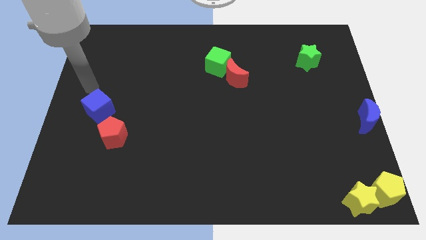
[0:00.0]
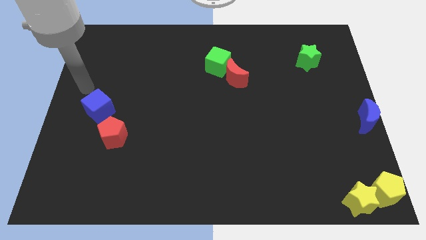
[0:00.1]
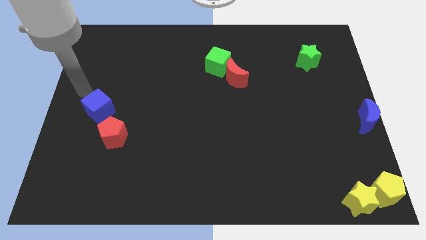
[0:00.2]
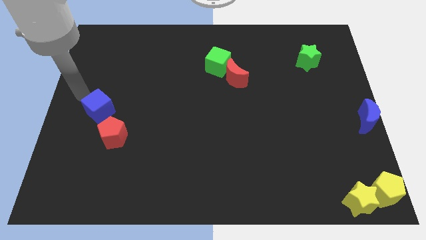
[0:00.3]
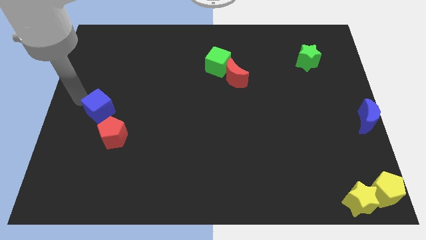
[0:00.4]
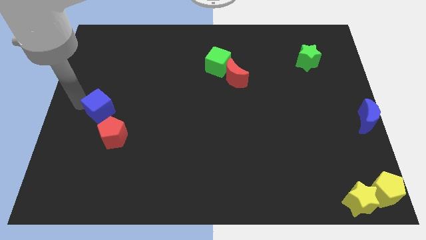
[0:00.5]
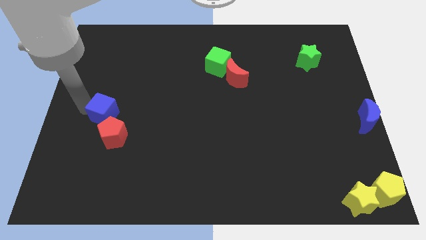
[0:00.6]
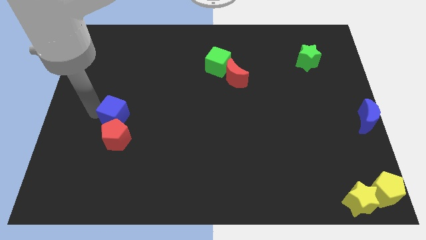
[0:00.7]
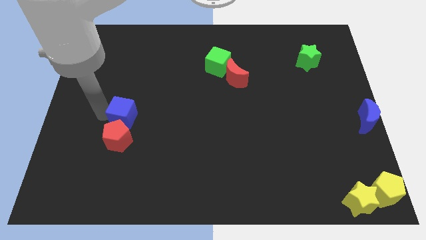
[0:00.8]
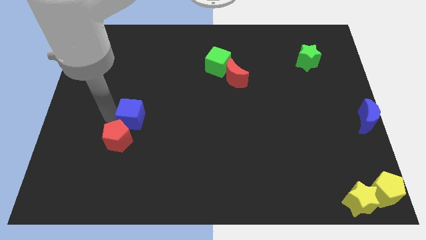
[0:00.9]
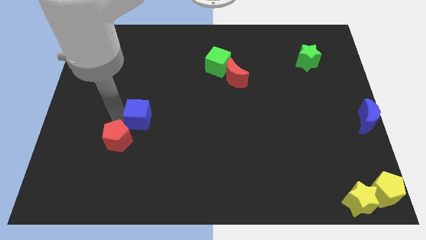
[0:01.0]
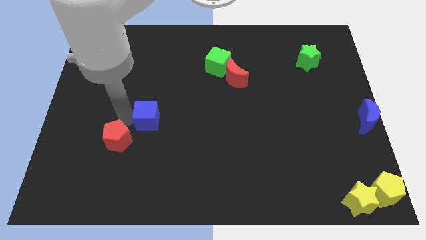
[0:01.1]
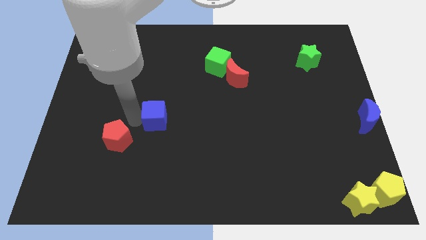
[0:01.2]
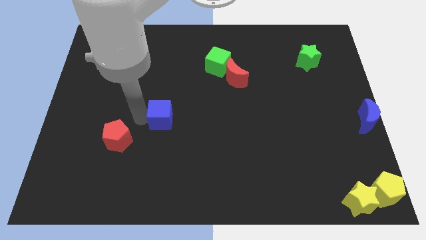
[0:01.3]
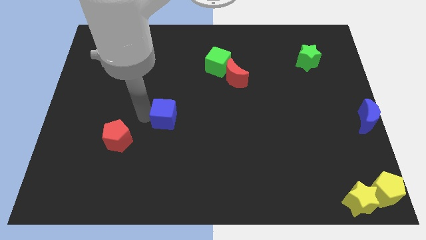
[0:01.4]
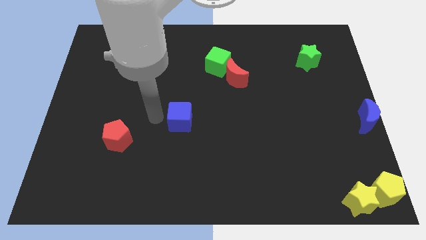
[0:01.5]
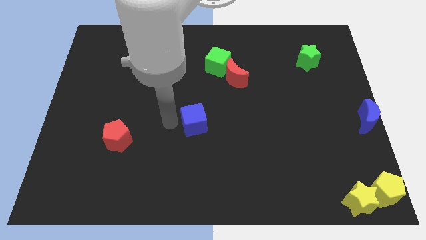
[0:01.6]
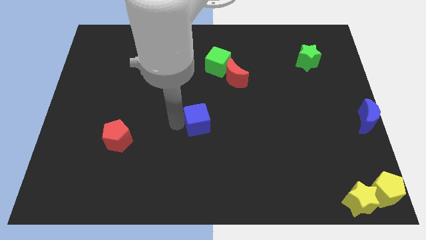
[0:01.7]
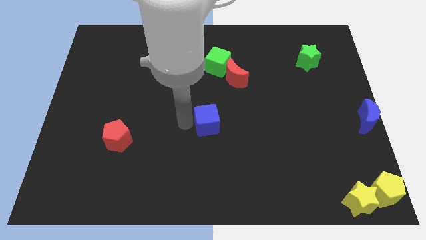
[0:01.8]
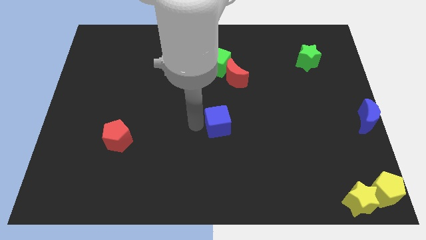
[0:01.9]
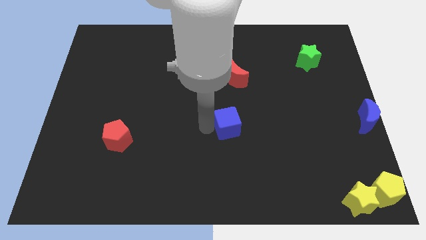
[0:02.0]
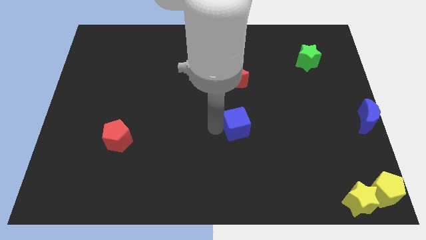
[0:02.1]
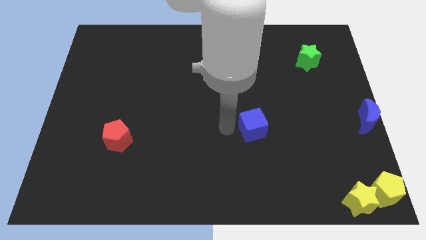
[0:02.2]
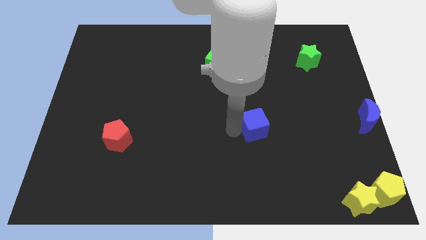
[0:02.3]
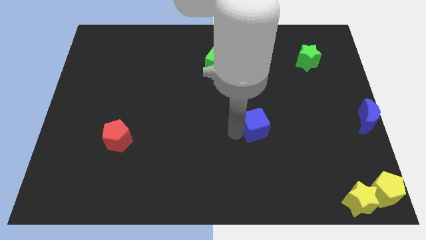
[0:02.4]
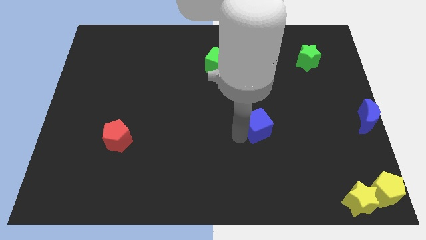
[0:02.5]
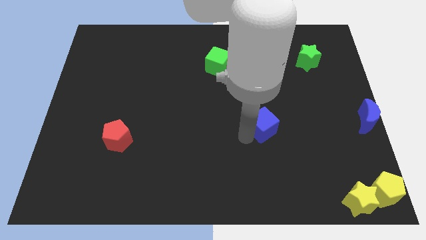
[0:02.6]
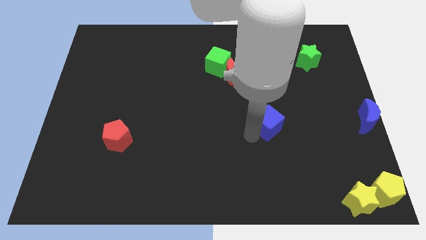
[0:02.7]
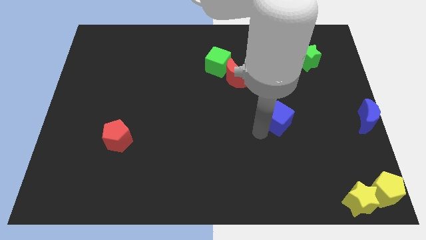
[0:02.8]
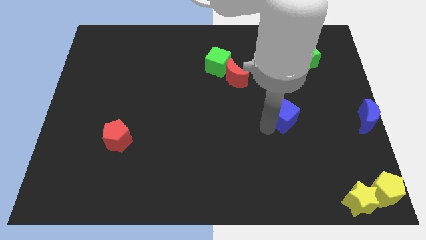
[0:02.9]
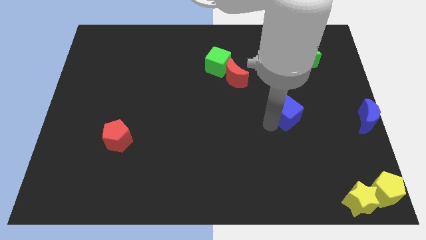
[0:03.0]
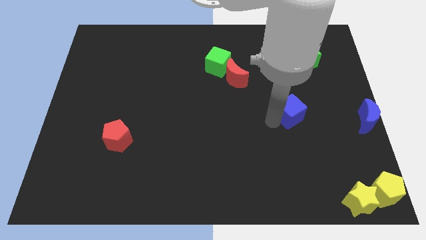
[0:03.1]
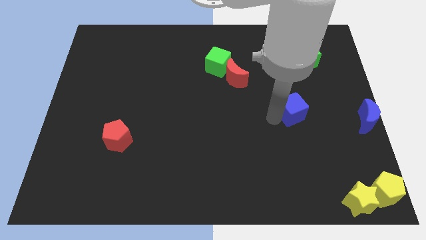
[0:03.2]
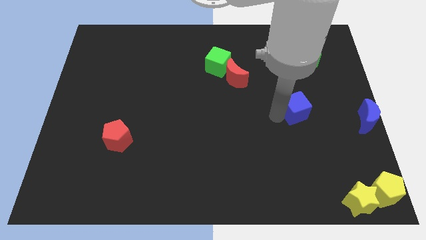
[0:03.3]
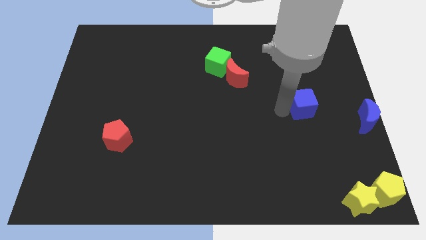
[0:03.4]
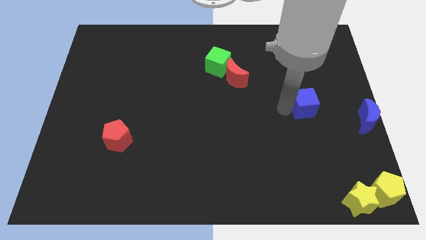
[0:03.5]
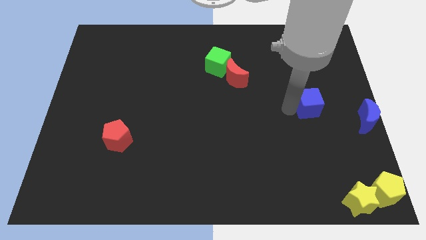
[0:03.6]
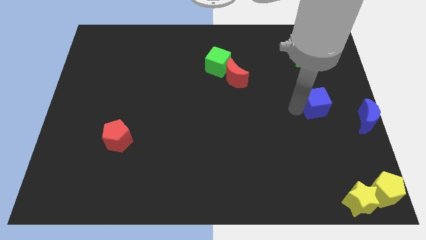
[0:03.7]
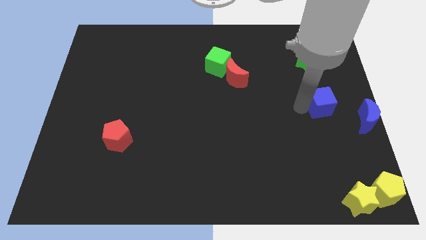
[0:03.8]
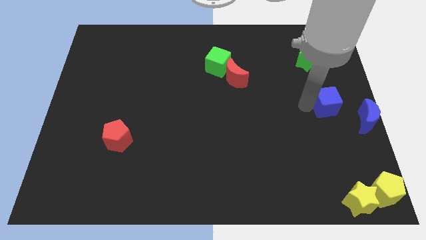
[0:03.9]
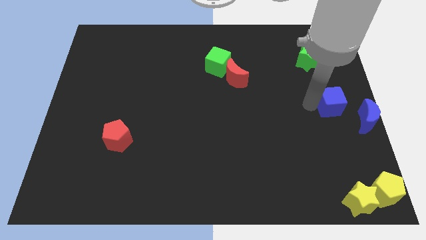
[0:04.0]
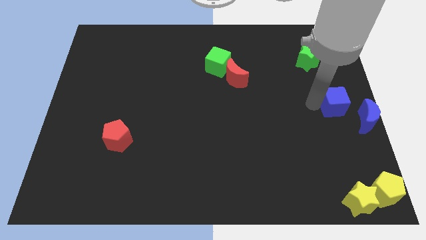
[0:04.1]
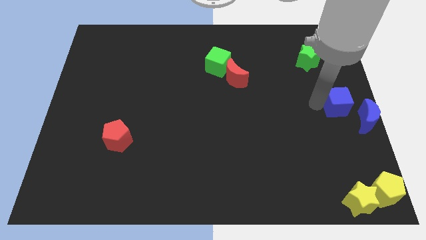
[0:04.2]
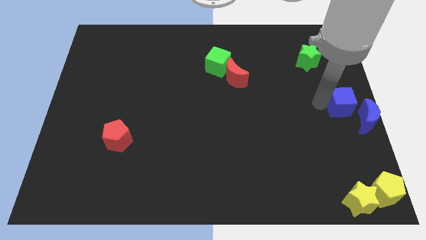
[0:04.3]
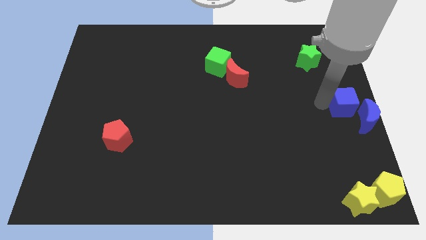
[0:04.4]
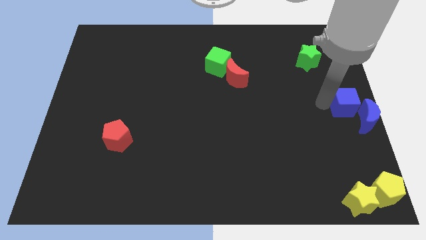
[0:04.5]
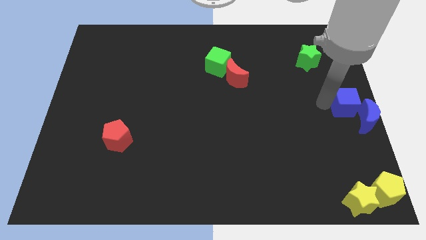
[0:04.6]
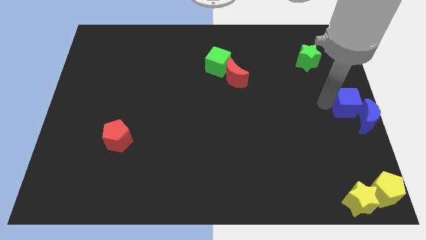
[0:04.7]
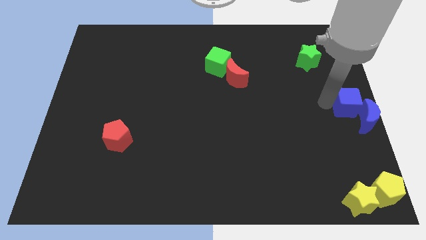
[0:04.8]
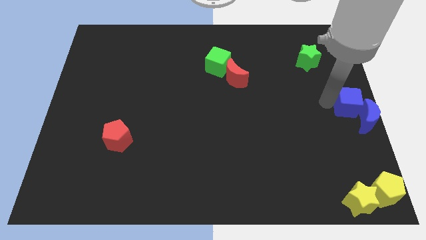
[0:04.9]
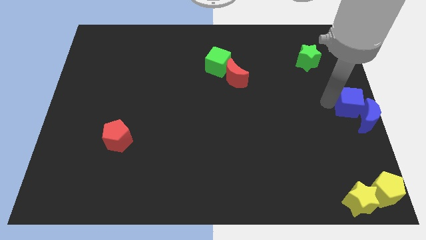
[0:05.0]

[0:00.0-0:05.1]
move the blue cube to the right center of the board

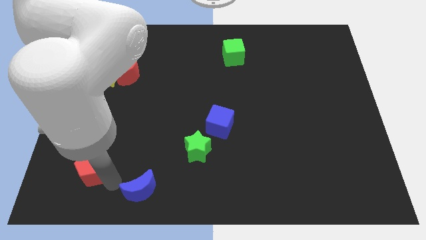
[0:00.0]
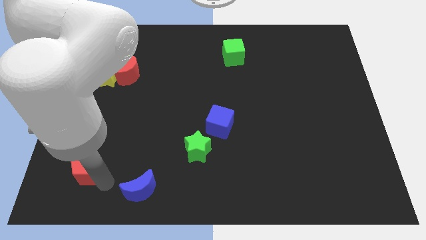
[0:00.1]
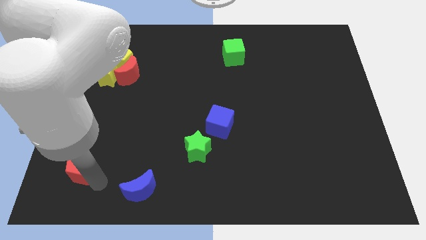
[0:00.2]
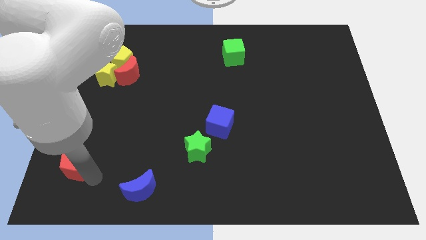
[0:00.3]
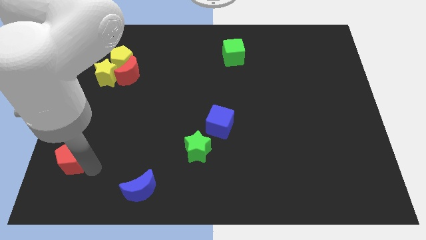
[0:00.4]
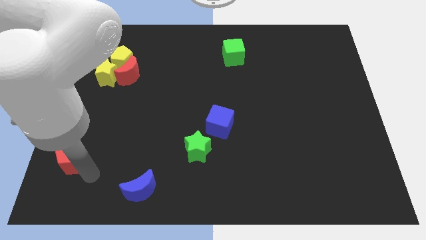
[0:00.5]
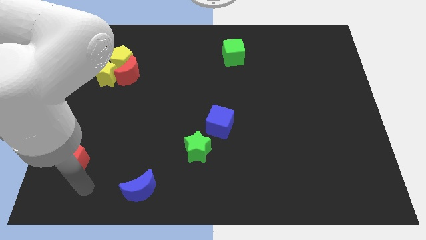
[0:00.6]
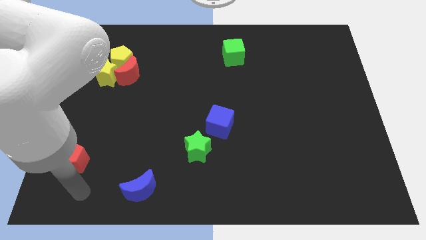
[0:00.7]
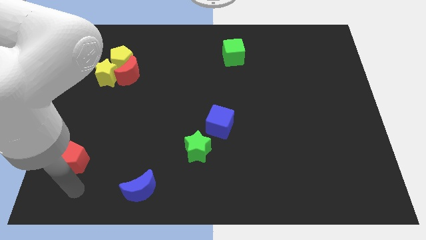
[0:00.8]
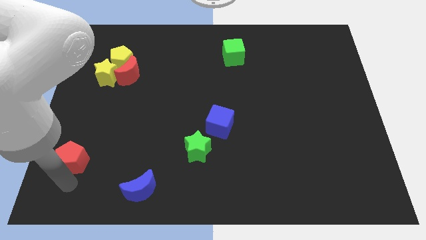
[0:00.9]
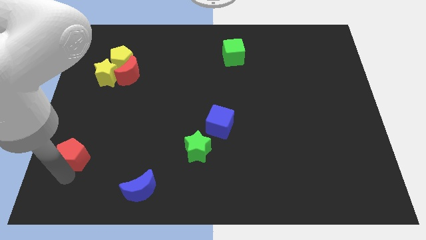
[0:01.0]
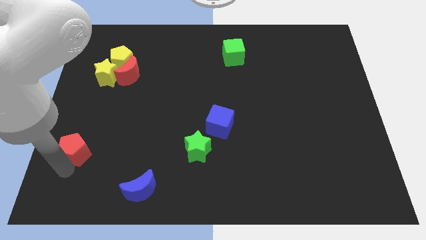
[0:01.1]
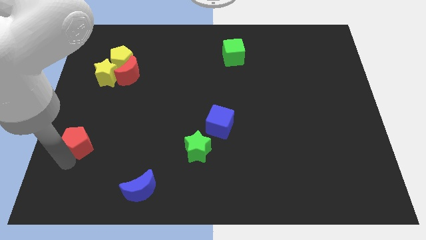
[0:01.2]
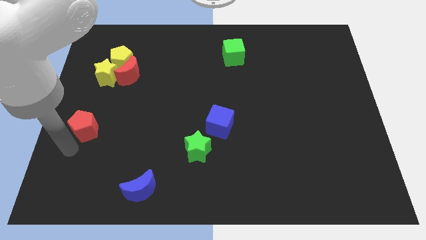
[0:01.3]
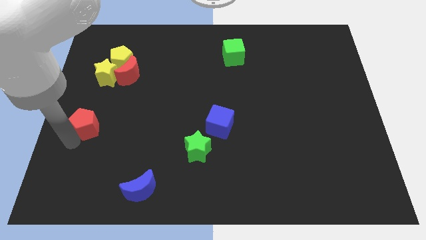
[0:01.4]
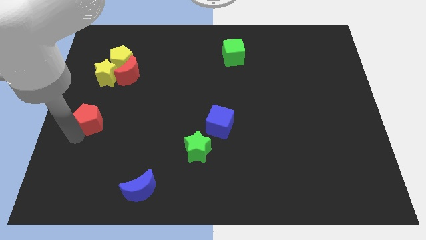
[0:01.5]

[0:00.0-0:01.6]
place the red pentagon vertically below the yellow star

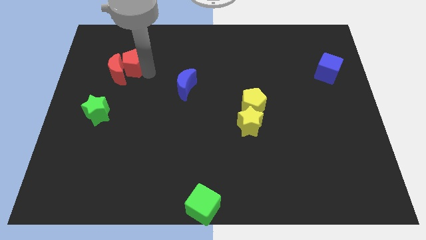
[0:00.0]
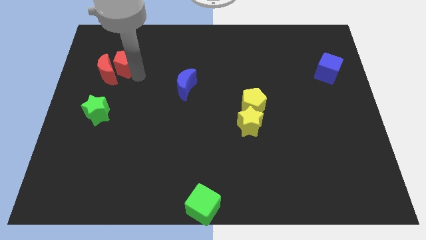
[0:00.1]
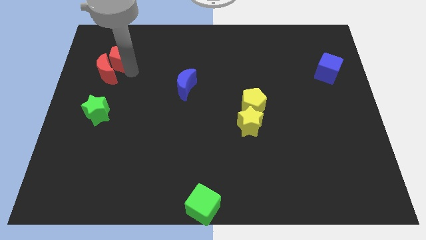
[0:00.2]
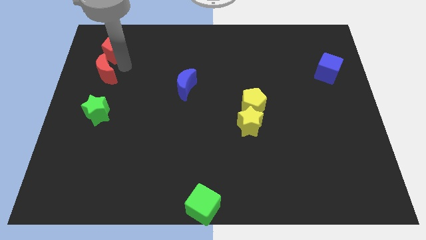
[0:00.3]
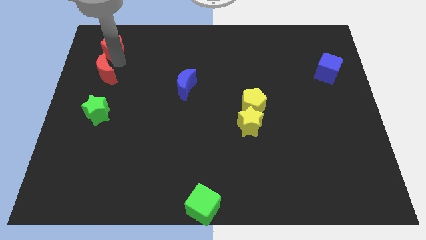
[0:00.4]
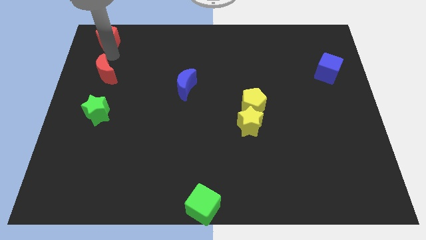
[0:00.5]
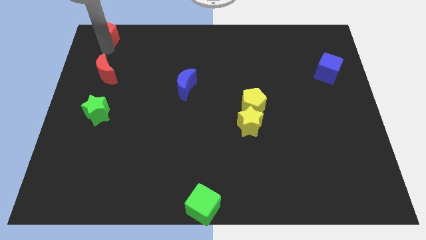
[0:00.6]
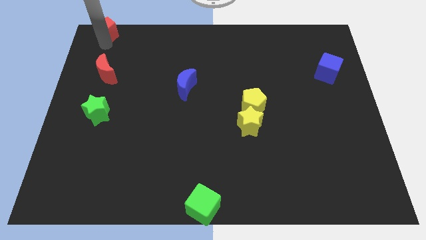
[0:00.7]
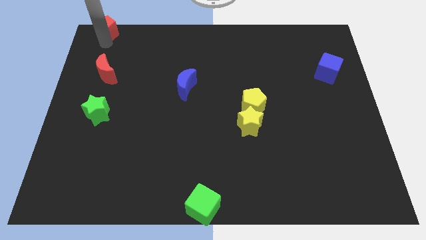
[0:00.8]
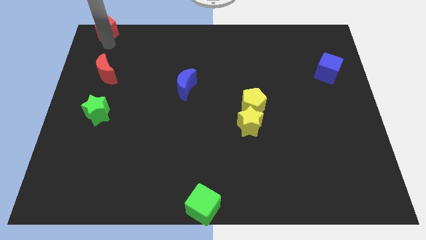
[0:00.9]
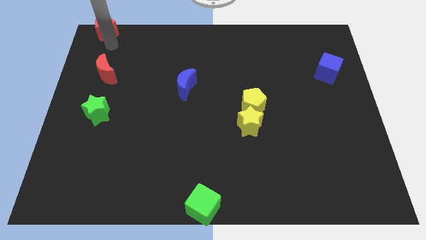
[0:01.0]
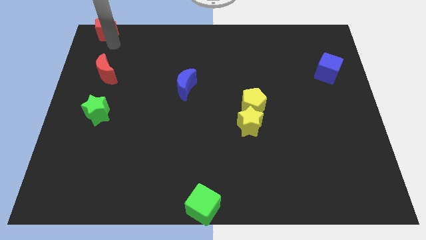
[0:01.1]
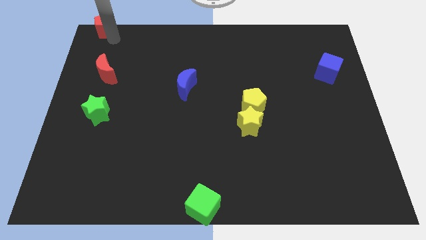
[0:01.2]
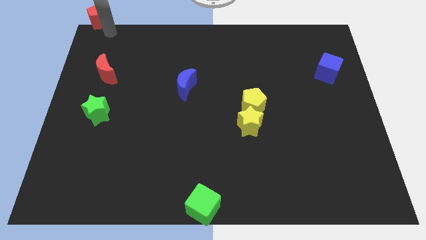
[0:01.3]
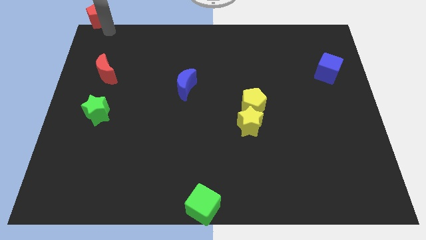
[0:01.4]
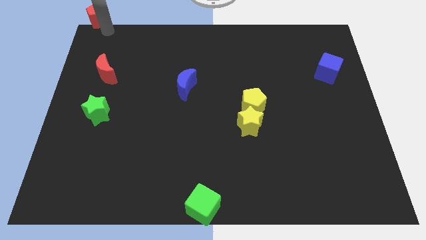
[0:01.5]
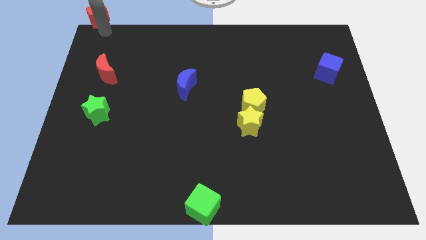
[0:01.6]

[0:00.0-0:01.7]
separate the red pentagon from the red moon

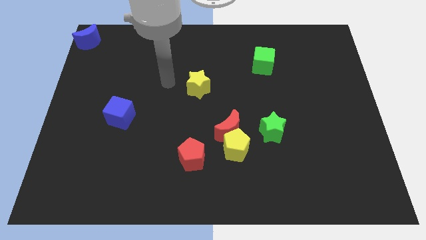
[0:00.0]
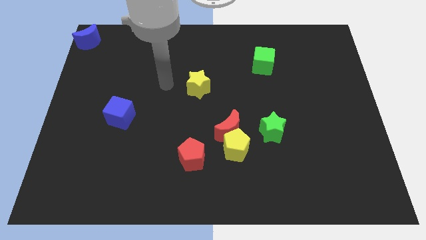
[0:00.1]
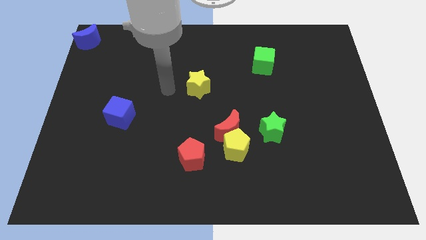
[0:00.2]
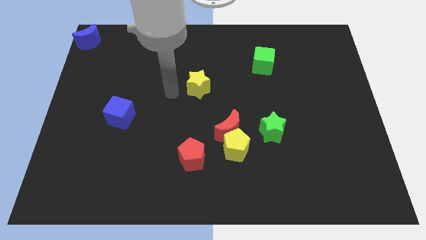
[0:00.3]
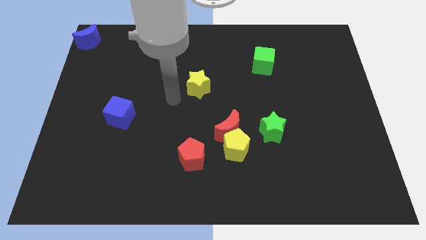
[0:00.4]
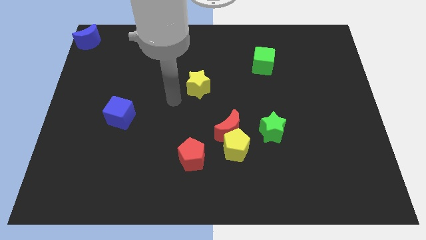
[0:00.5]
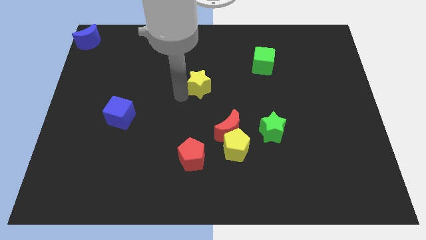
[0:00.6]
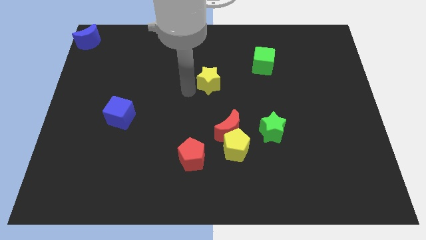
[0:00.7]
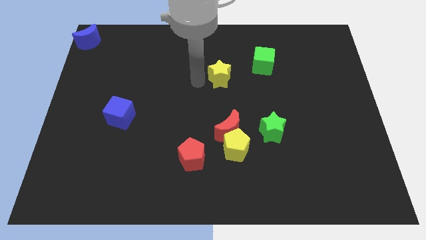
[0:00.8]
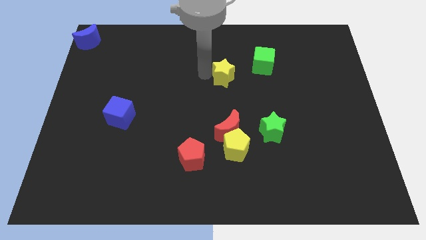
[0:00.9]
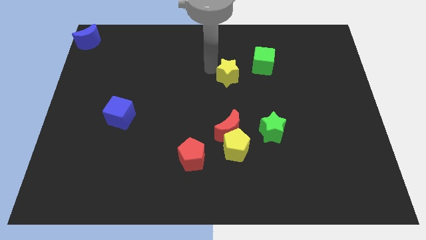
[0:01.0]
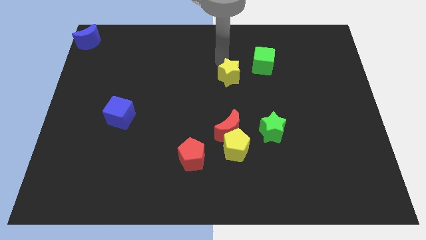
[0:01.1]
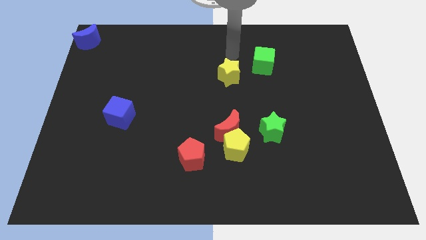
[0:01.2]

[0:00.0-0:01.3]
push the yellow star towards the green cube
